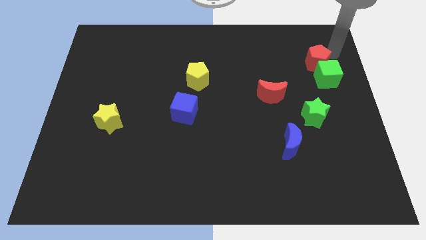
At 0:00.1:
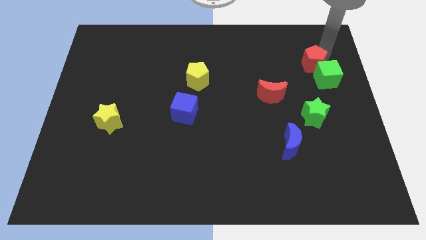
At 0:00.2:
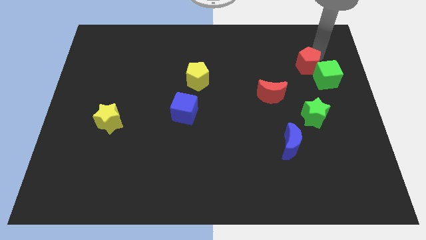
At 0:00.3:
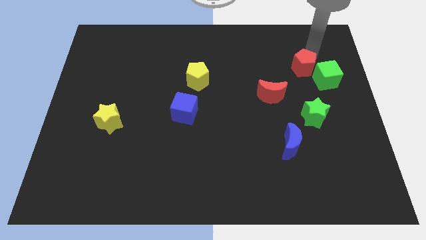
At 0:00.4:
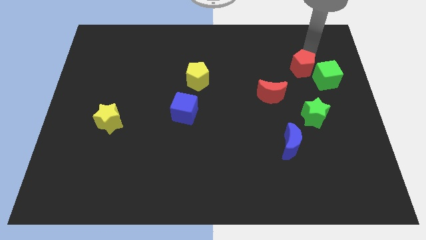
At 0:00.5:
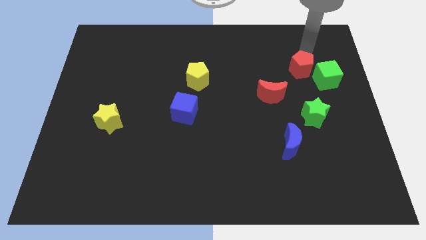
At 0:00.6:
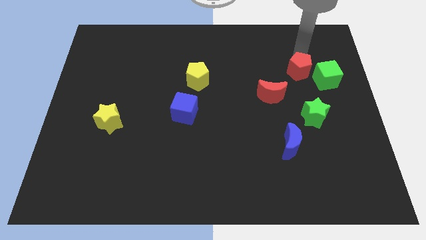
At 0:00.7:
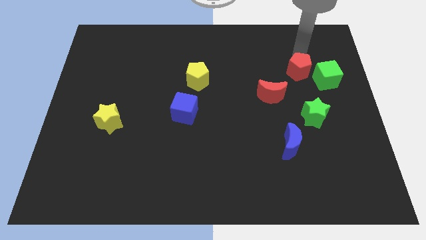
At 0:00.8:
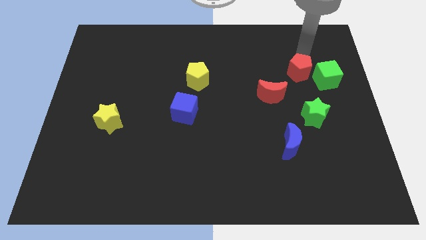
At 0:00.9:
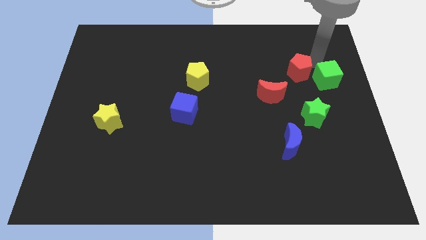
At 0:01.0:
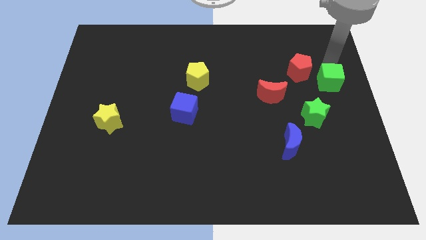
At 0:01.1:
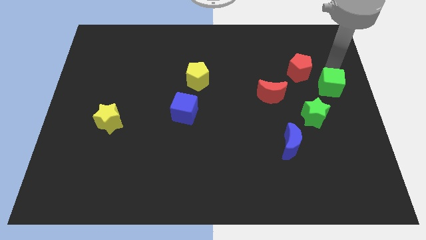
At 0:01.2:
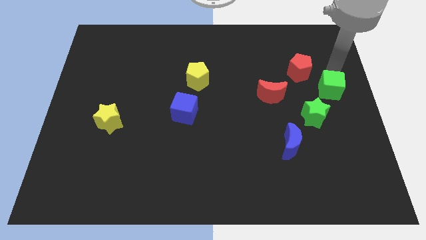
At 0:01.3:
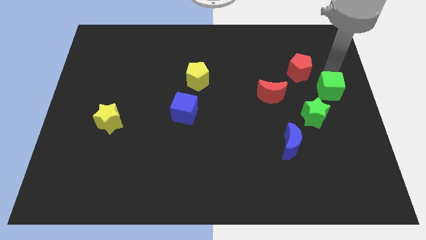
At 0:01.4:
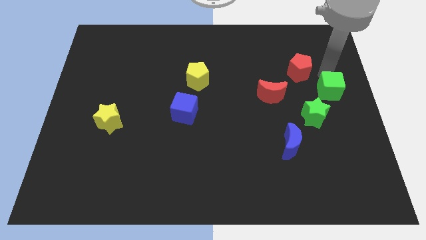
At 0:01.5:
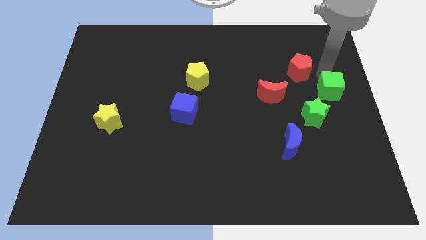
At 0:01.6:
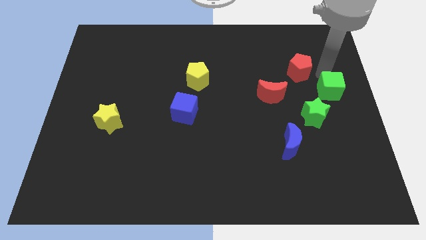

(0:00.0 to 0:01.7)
separate the red pentagon and the green cube

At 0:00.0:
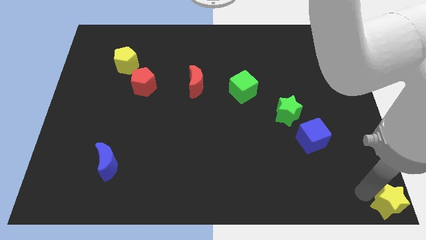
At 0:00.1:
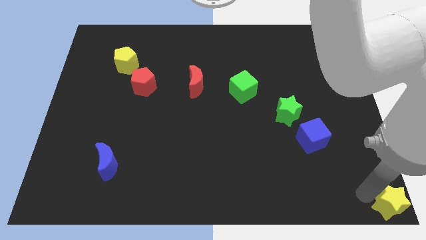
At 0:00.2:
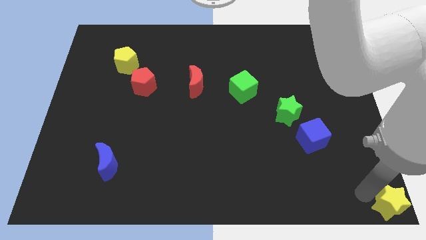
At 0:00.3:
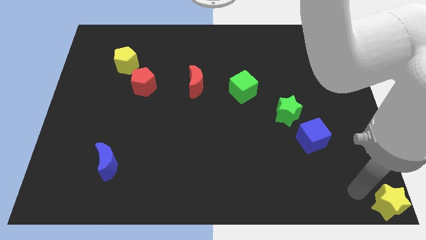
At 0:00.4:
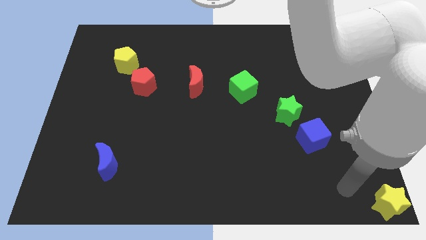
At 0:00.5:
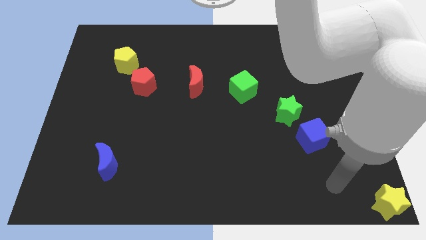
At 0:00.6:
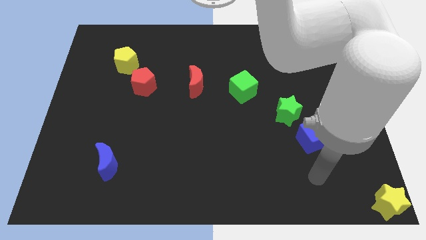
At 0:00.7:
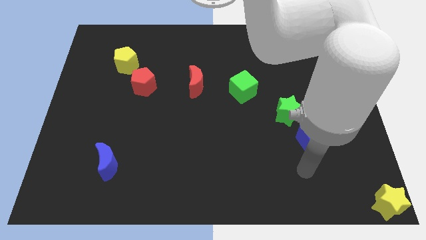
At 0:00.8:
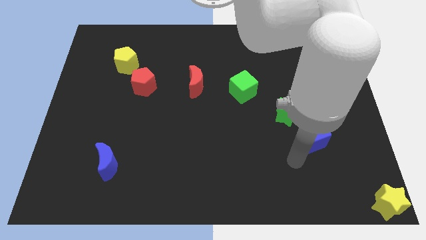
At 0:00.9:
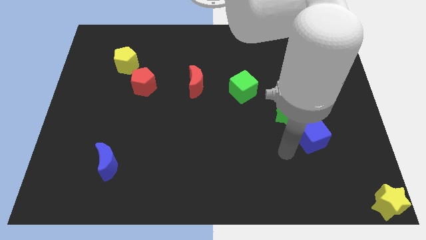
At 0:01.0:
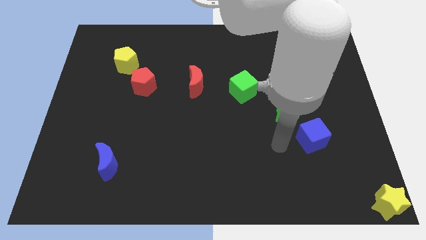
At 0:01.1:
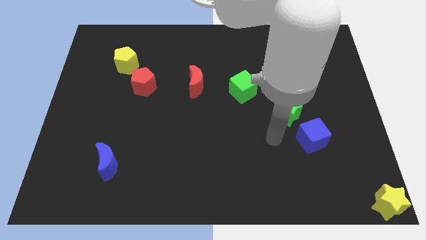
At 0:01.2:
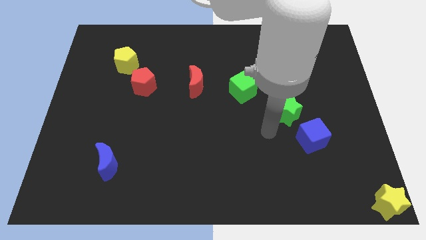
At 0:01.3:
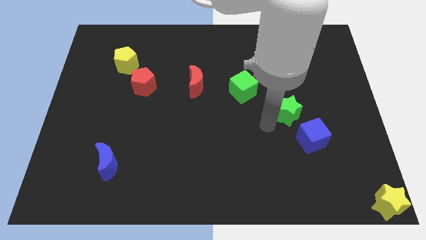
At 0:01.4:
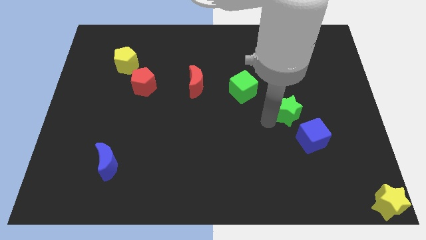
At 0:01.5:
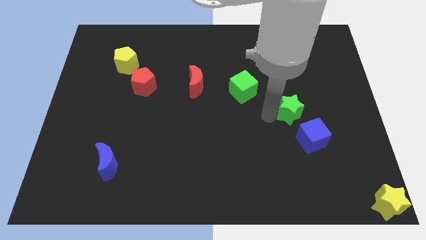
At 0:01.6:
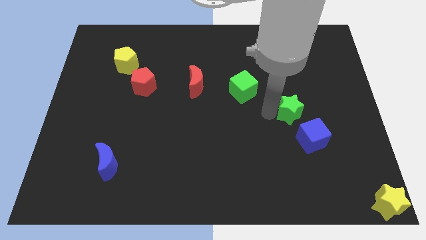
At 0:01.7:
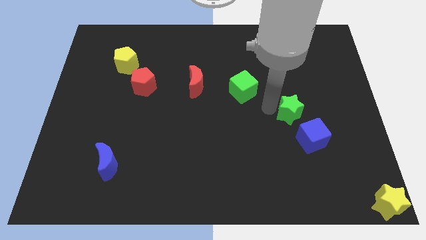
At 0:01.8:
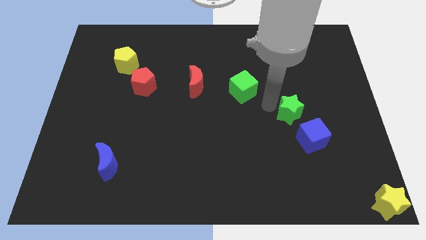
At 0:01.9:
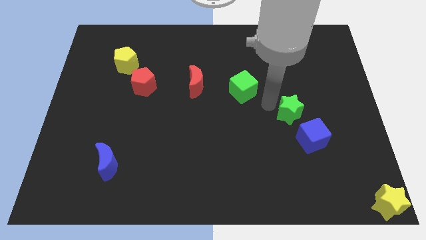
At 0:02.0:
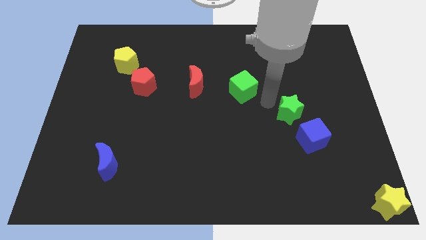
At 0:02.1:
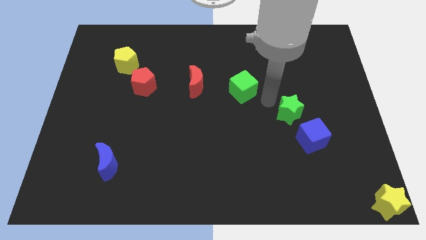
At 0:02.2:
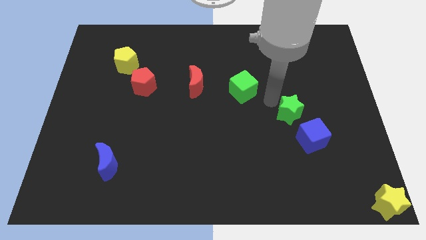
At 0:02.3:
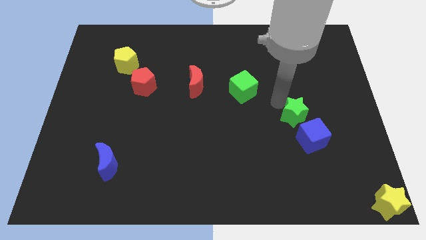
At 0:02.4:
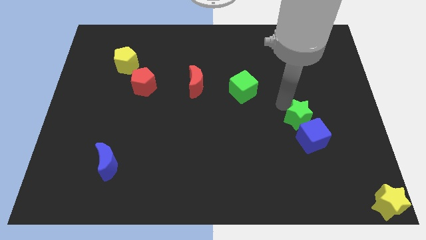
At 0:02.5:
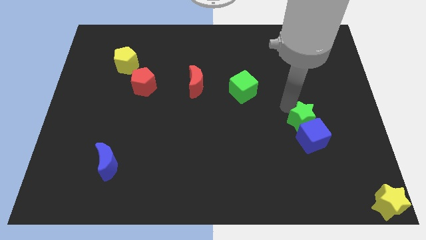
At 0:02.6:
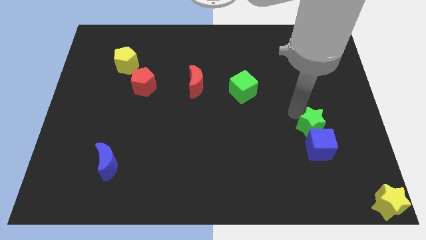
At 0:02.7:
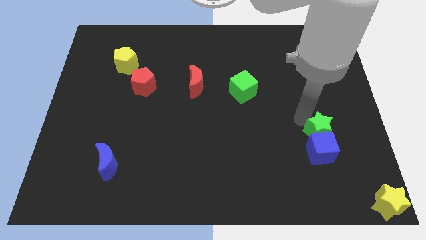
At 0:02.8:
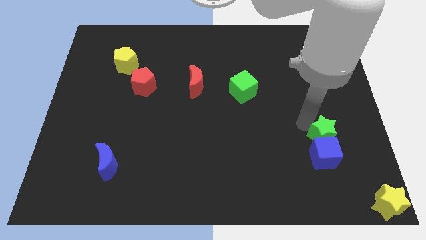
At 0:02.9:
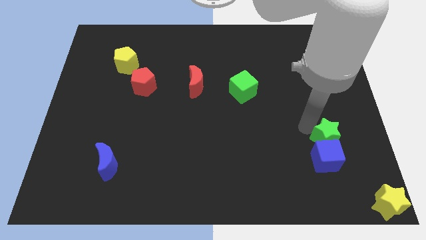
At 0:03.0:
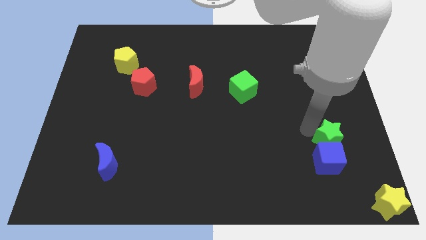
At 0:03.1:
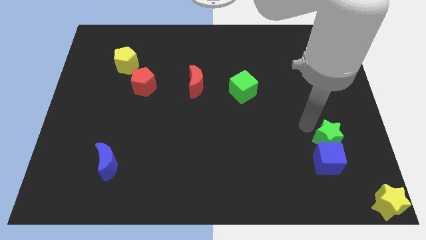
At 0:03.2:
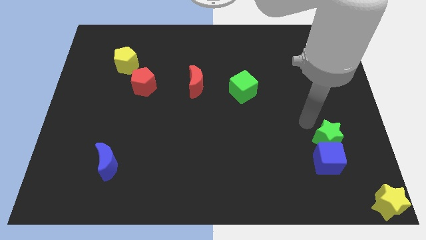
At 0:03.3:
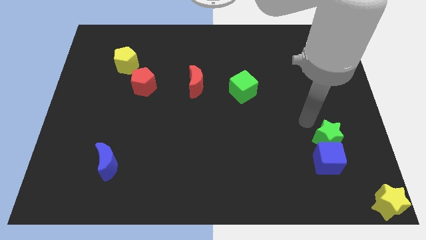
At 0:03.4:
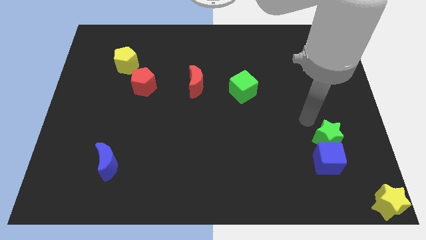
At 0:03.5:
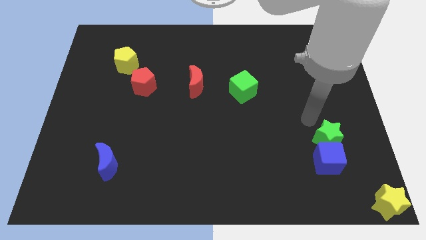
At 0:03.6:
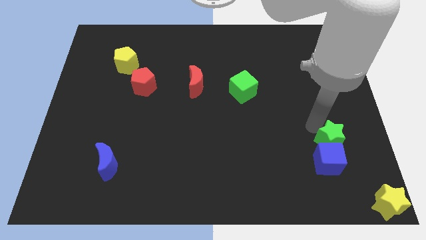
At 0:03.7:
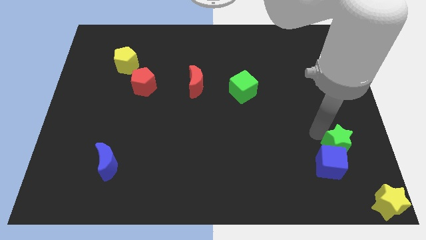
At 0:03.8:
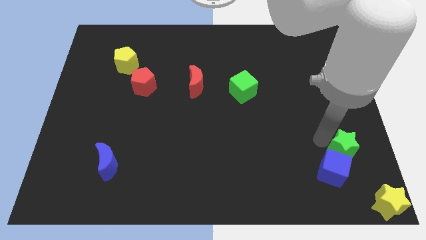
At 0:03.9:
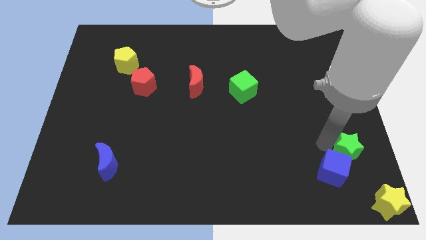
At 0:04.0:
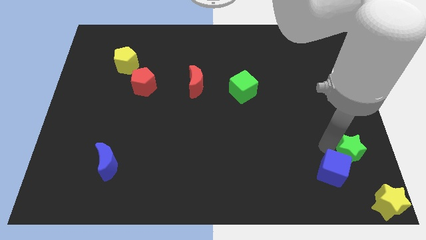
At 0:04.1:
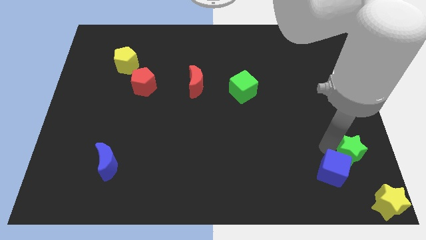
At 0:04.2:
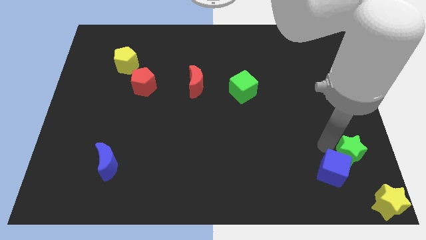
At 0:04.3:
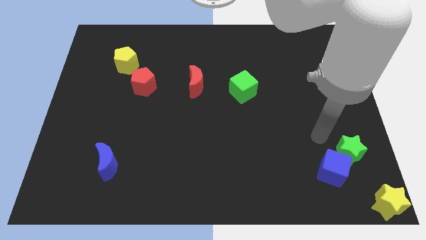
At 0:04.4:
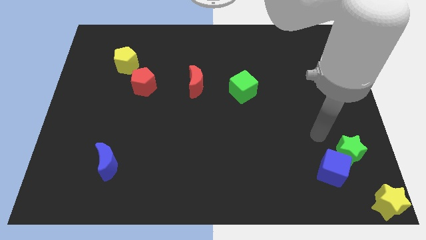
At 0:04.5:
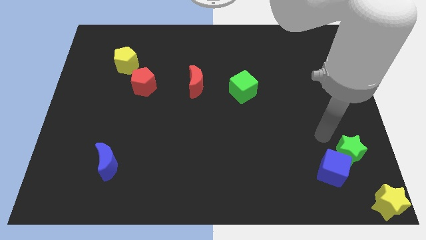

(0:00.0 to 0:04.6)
push the blue cube and the green star towards the bottom right

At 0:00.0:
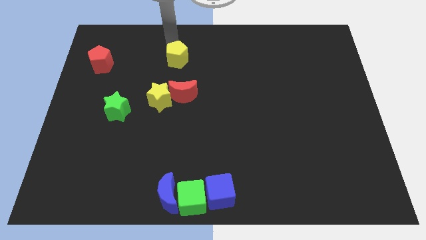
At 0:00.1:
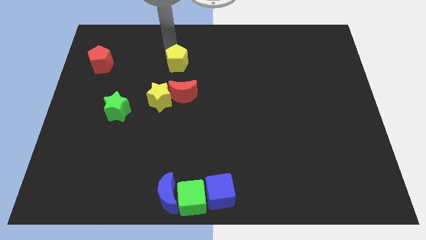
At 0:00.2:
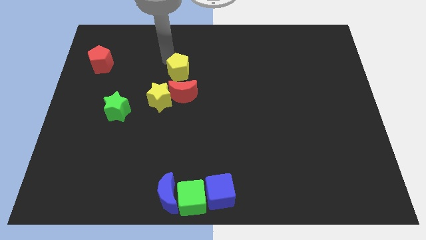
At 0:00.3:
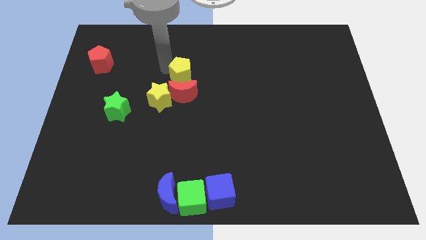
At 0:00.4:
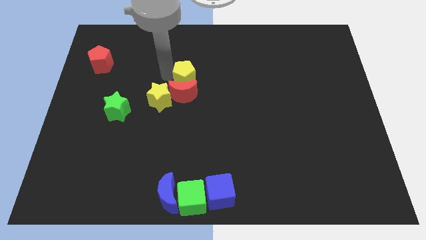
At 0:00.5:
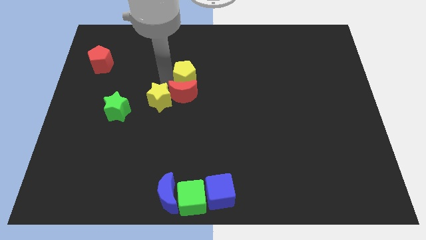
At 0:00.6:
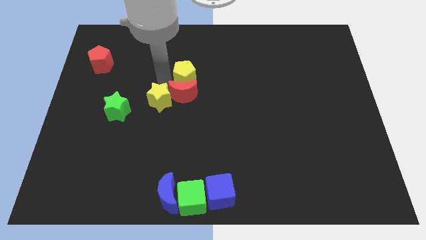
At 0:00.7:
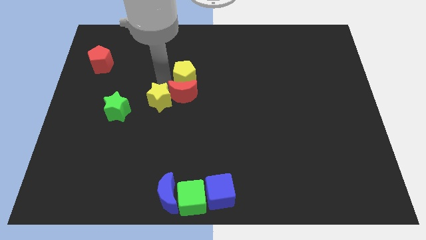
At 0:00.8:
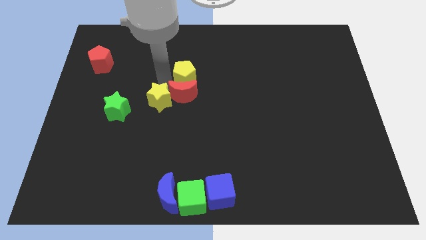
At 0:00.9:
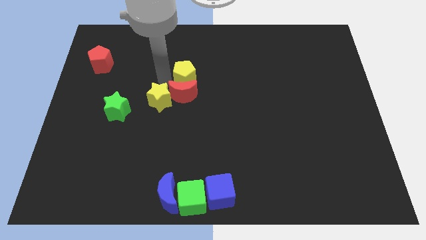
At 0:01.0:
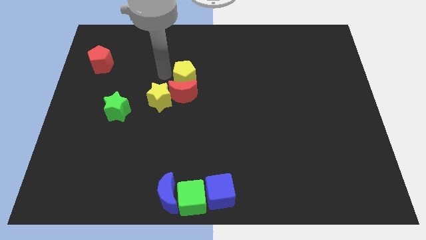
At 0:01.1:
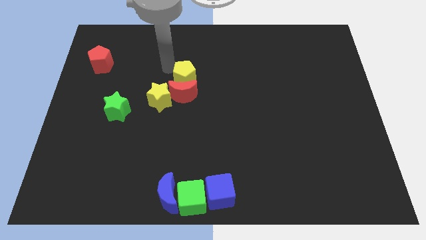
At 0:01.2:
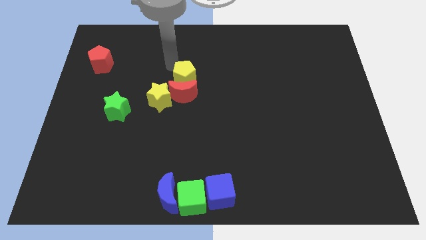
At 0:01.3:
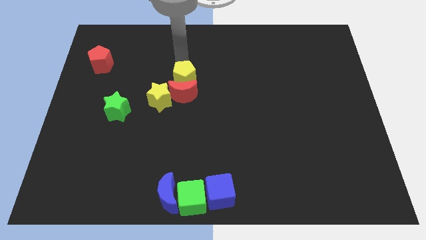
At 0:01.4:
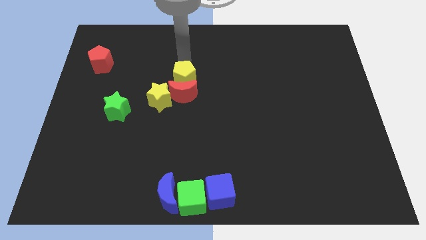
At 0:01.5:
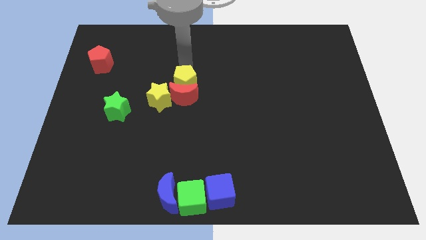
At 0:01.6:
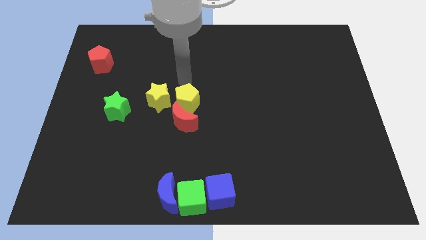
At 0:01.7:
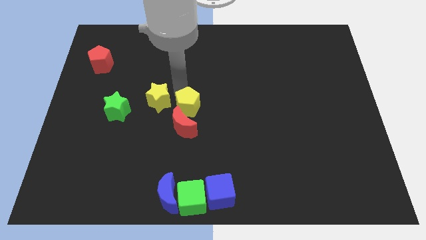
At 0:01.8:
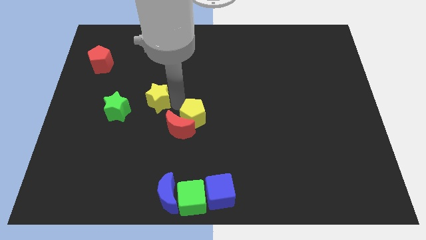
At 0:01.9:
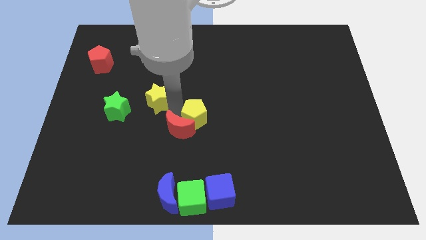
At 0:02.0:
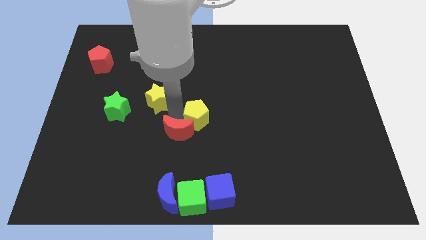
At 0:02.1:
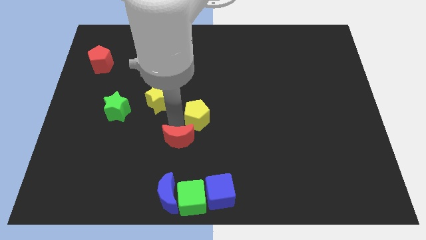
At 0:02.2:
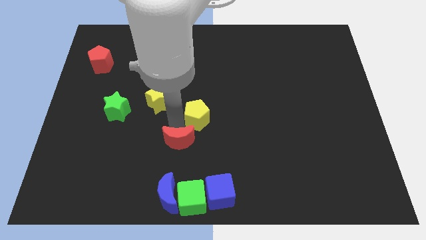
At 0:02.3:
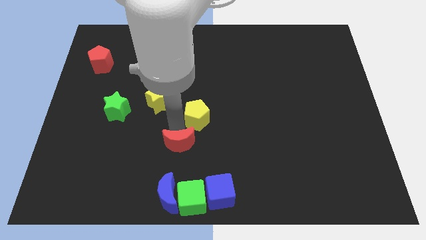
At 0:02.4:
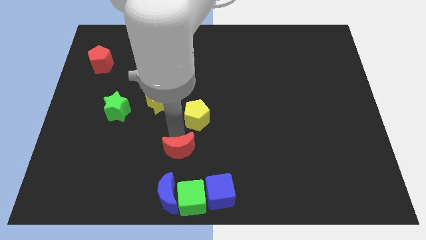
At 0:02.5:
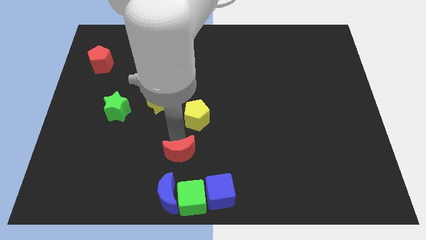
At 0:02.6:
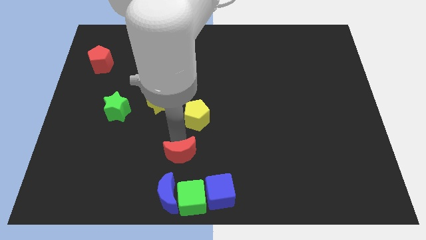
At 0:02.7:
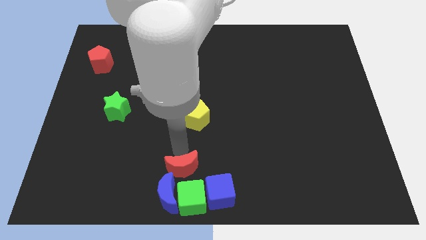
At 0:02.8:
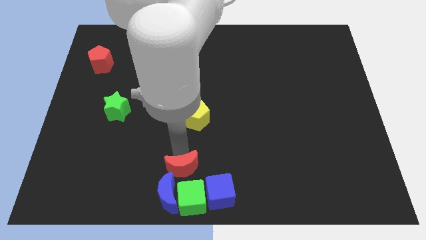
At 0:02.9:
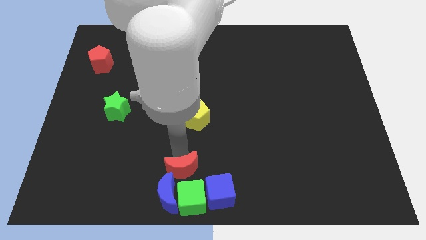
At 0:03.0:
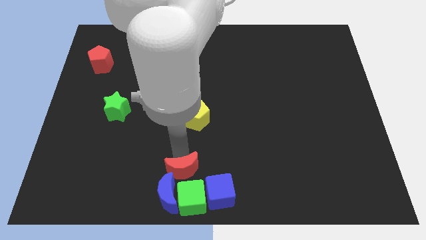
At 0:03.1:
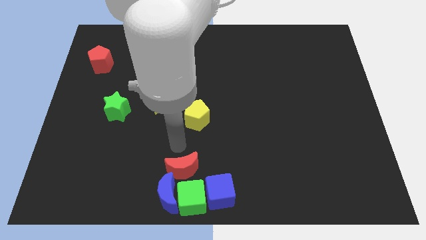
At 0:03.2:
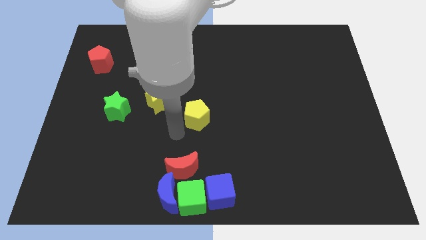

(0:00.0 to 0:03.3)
push the red crescent to the top right side of the blue moon
